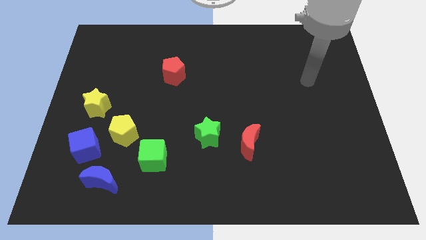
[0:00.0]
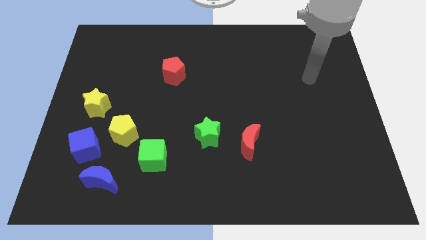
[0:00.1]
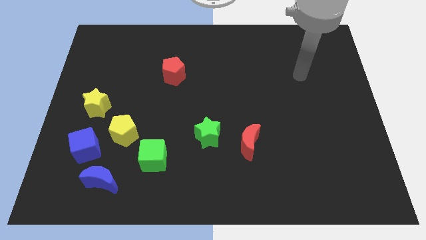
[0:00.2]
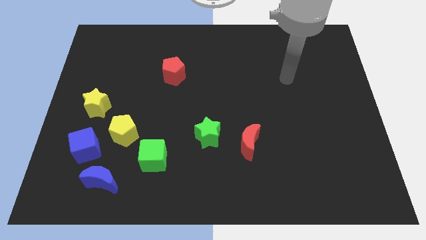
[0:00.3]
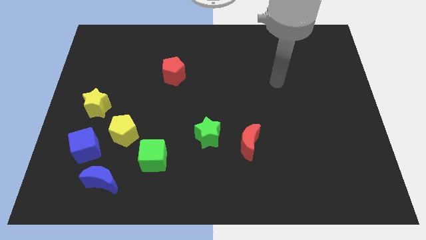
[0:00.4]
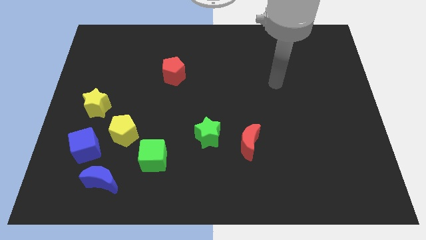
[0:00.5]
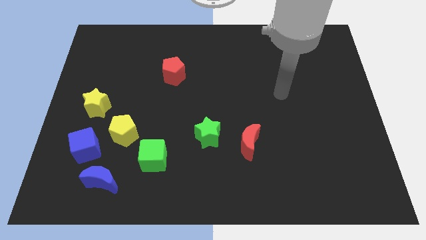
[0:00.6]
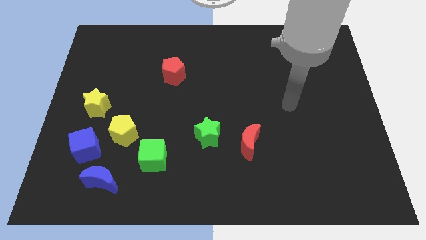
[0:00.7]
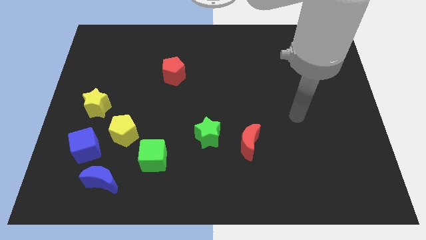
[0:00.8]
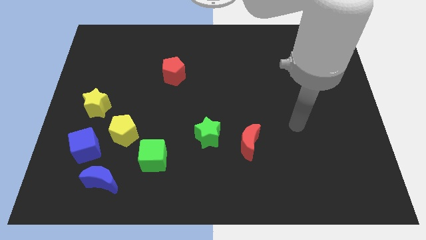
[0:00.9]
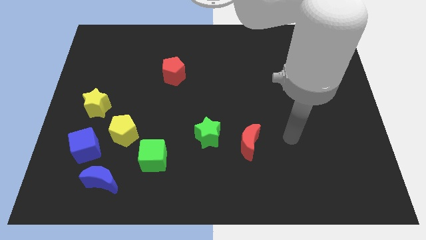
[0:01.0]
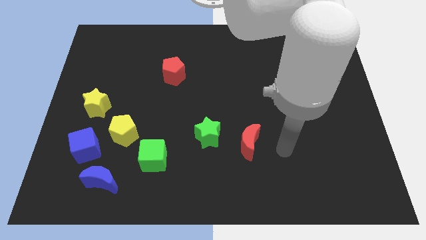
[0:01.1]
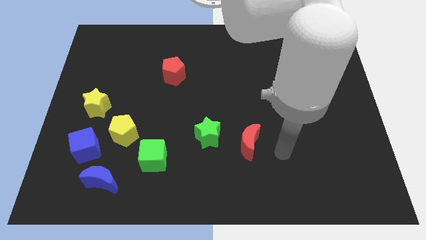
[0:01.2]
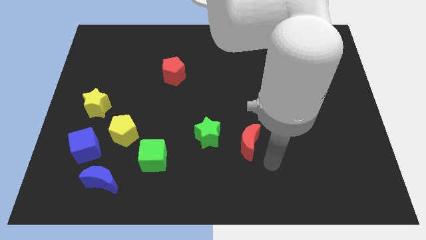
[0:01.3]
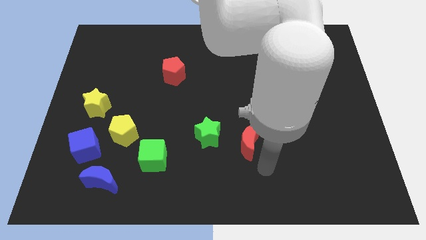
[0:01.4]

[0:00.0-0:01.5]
move your arm close to the red moon

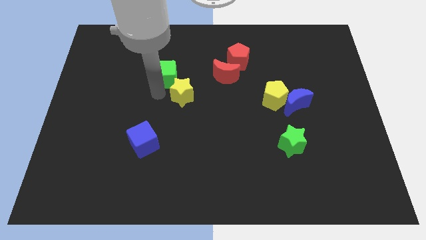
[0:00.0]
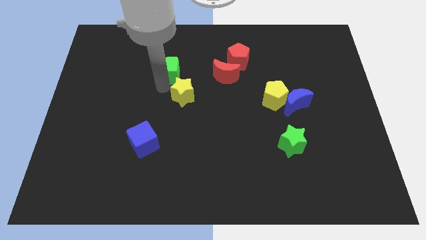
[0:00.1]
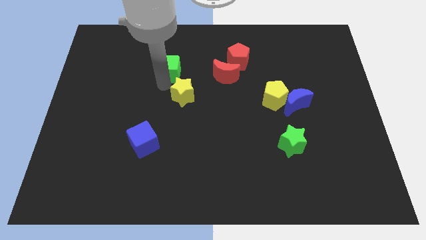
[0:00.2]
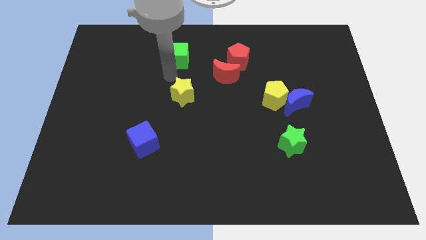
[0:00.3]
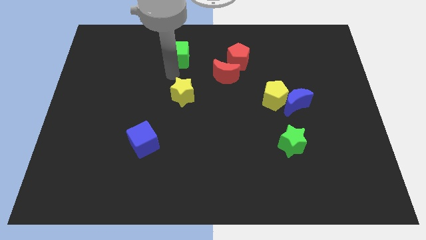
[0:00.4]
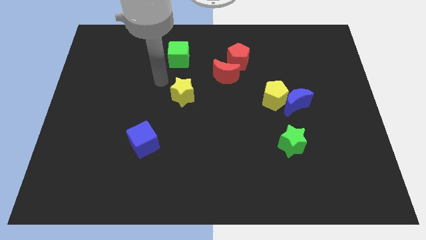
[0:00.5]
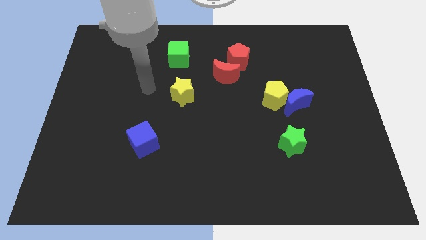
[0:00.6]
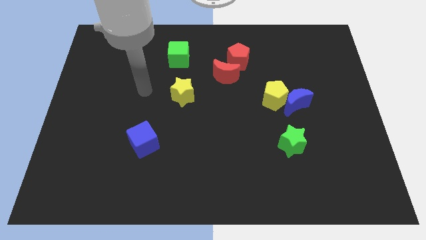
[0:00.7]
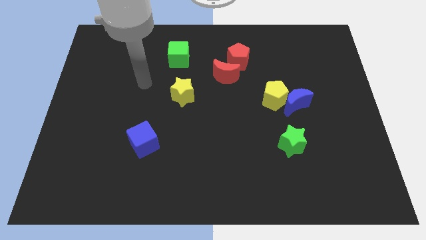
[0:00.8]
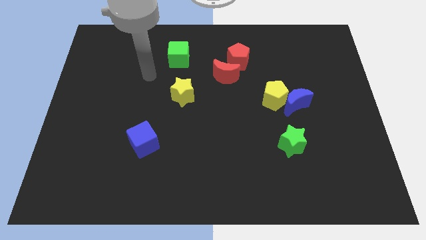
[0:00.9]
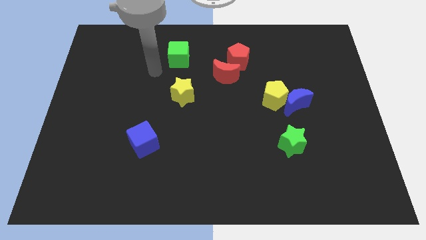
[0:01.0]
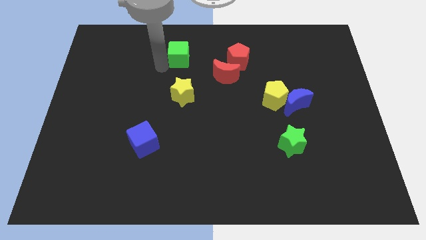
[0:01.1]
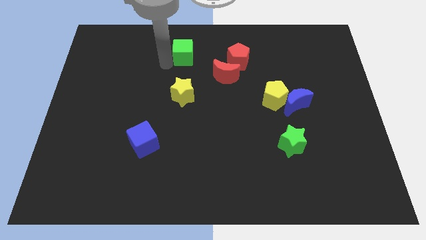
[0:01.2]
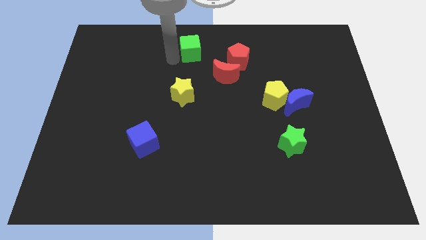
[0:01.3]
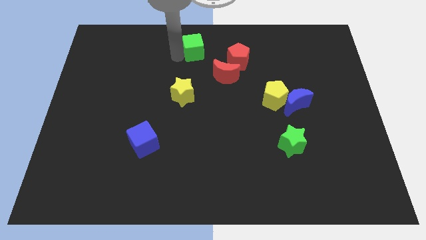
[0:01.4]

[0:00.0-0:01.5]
move the green cube diagonally to the top left of the red moon

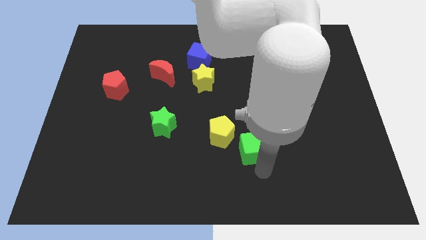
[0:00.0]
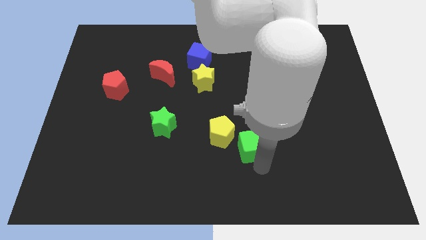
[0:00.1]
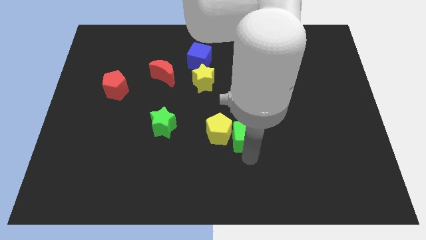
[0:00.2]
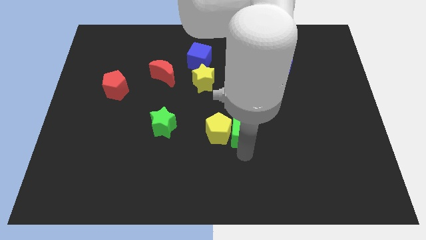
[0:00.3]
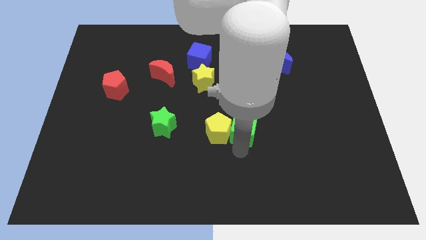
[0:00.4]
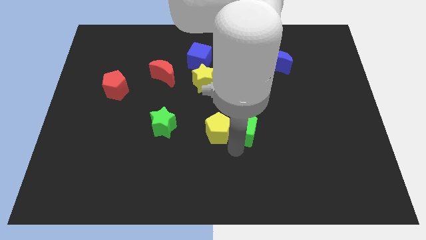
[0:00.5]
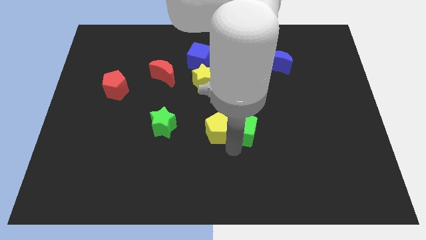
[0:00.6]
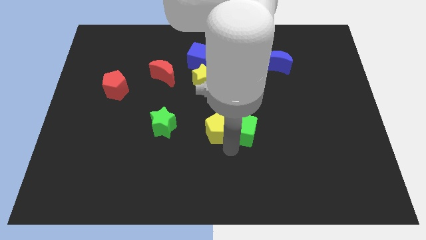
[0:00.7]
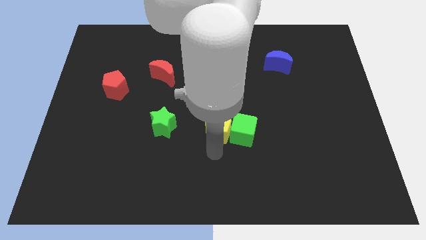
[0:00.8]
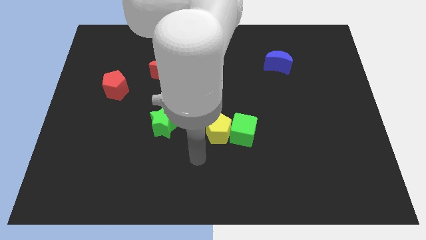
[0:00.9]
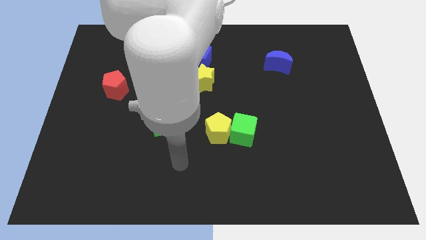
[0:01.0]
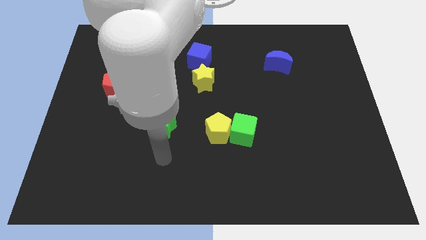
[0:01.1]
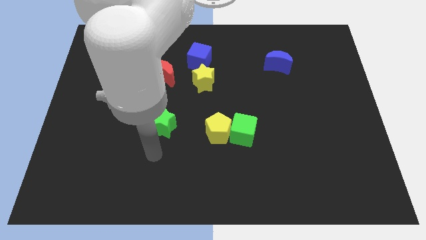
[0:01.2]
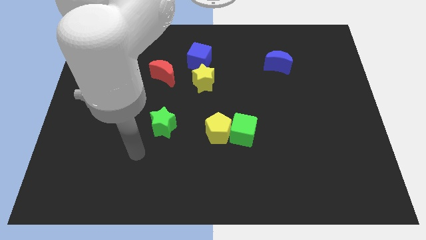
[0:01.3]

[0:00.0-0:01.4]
move the green cube right beside the yellow pentagon

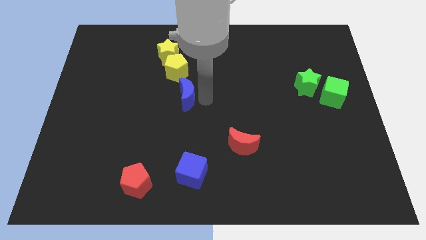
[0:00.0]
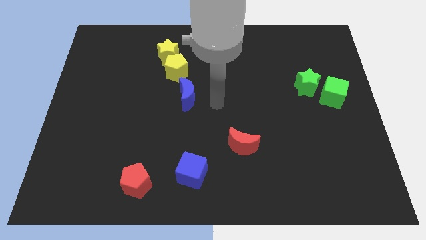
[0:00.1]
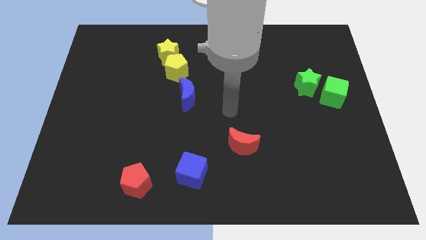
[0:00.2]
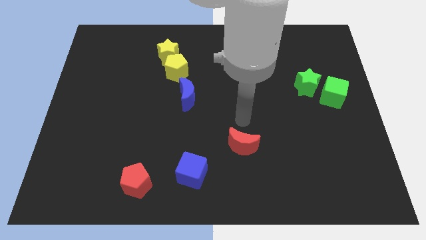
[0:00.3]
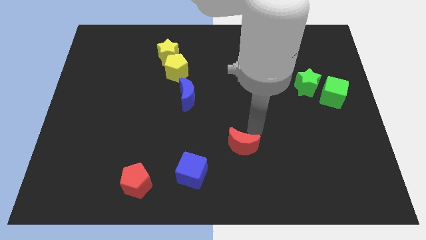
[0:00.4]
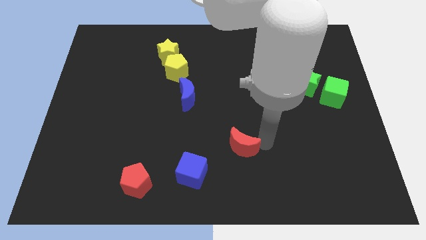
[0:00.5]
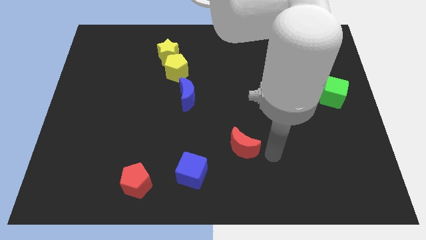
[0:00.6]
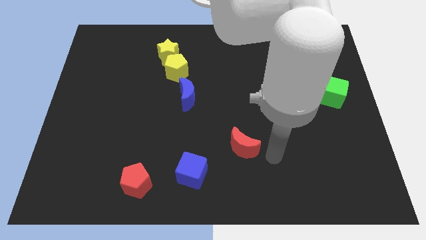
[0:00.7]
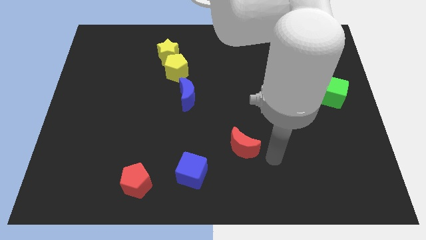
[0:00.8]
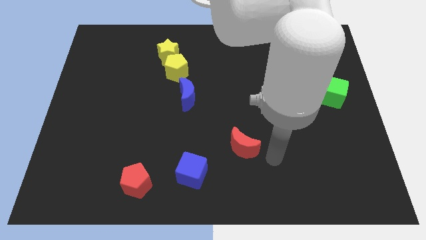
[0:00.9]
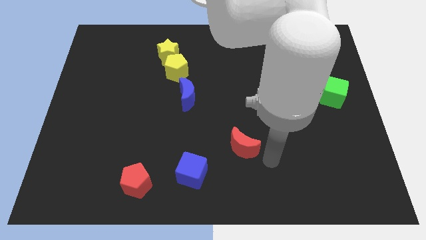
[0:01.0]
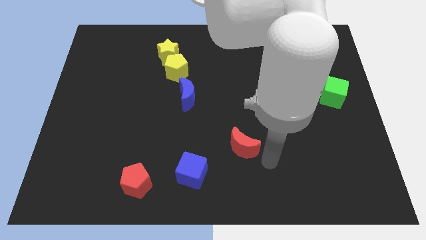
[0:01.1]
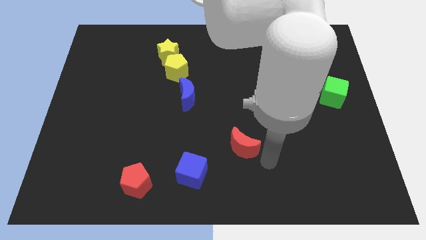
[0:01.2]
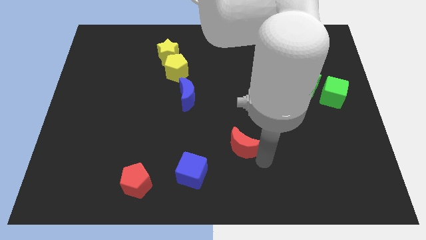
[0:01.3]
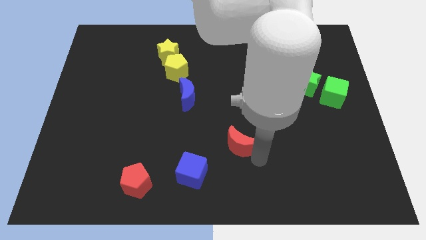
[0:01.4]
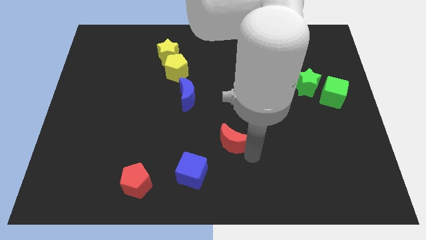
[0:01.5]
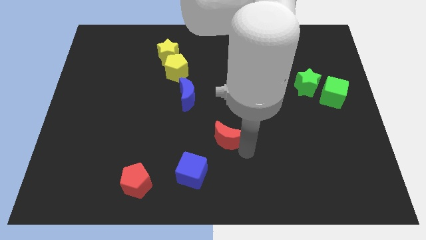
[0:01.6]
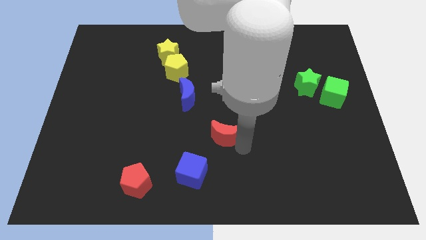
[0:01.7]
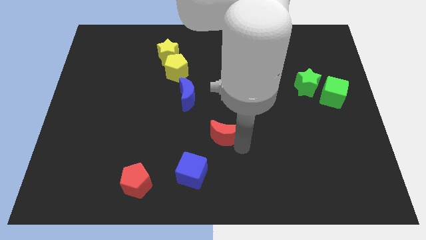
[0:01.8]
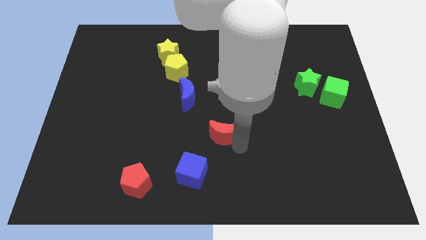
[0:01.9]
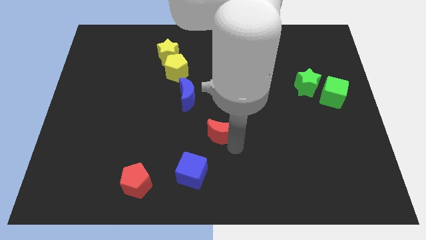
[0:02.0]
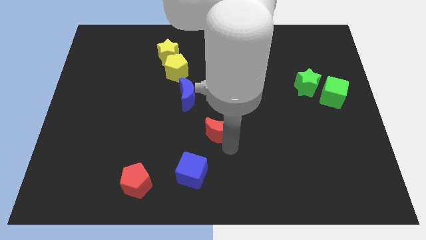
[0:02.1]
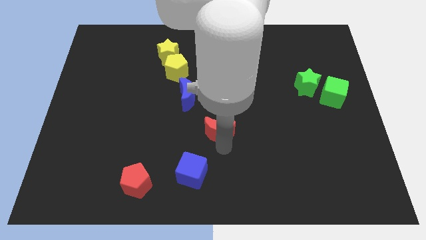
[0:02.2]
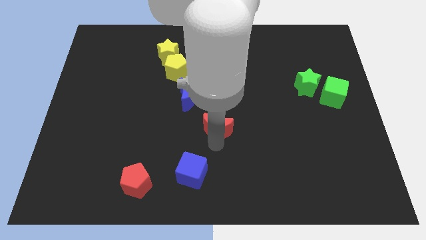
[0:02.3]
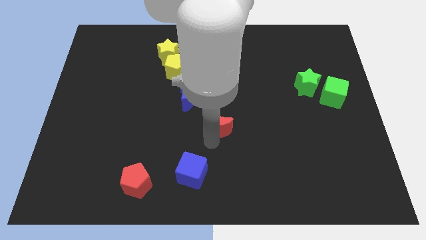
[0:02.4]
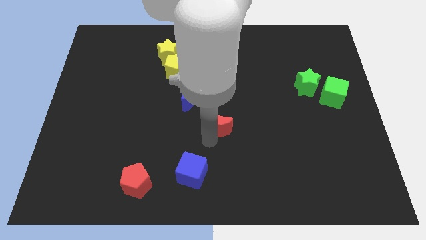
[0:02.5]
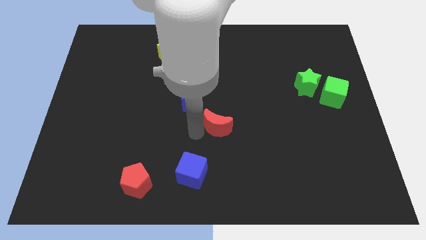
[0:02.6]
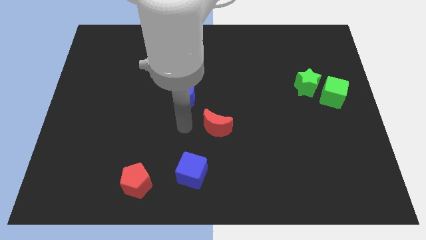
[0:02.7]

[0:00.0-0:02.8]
move the red crescent to the bottom right of the blue crescent

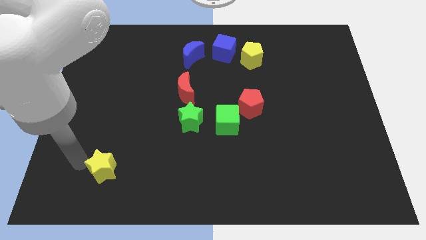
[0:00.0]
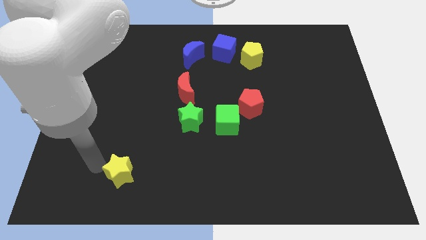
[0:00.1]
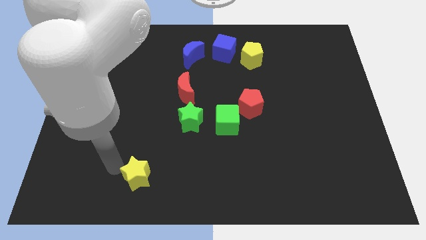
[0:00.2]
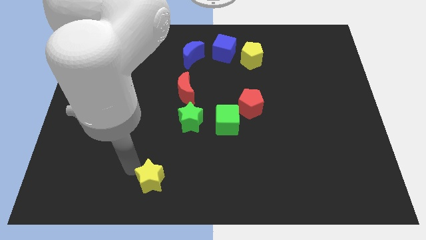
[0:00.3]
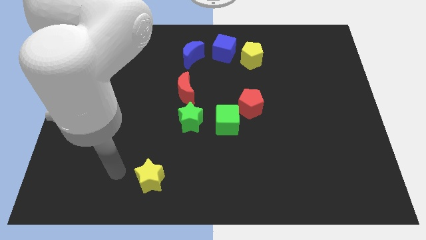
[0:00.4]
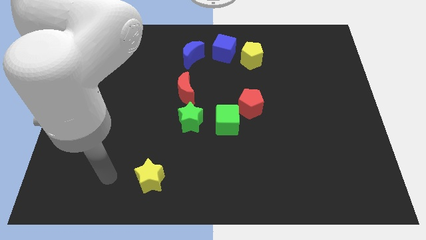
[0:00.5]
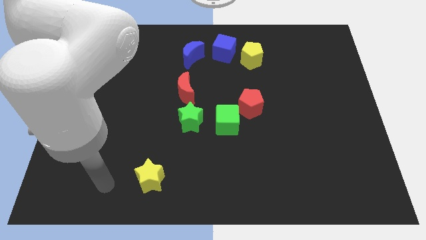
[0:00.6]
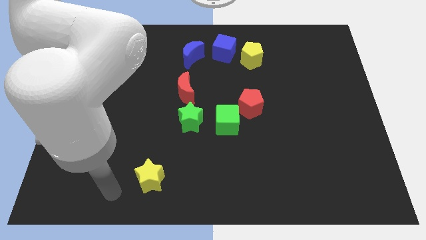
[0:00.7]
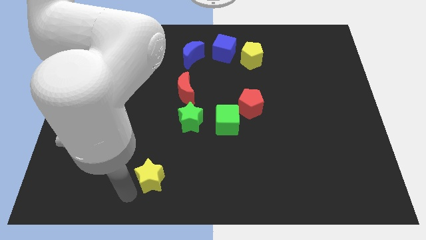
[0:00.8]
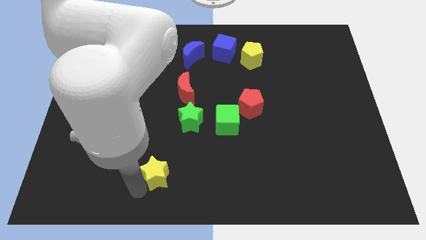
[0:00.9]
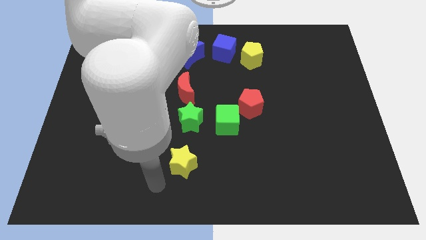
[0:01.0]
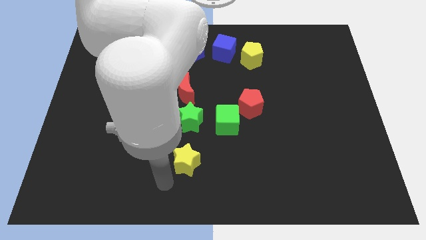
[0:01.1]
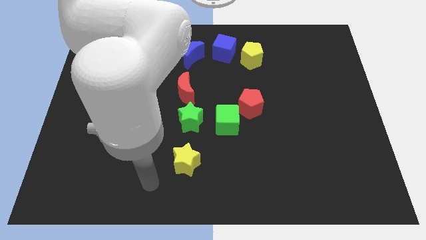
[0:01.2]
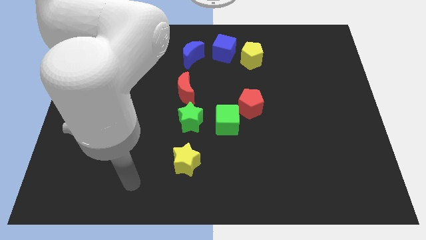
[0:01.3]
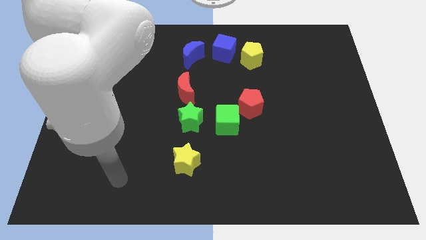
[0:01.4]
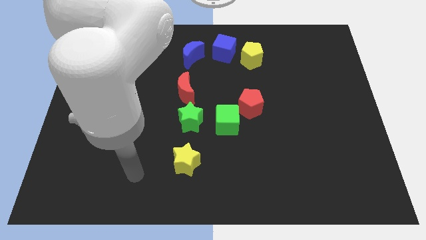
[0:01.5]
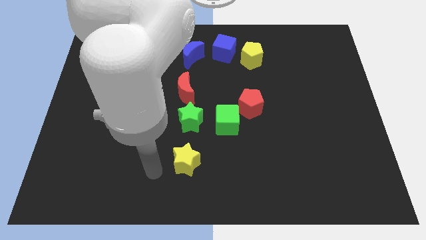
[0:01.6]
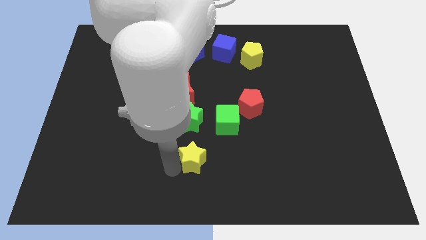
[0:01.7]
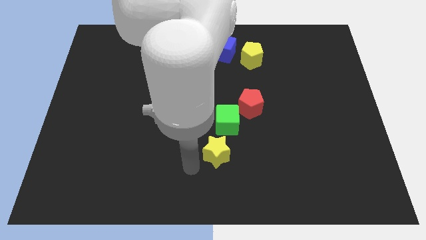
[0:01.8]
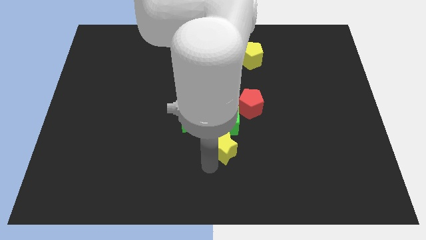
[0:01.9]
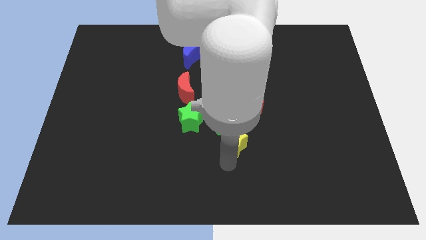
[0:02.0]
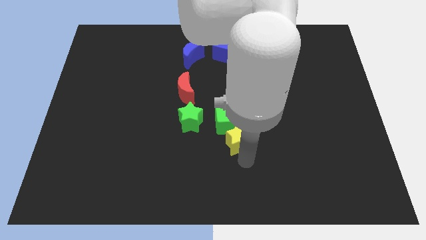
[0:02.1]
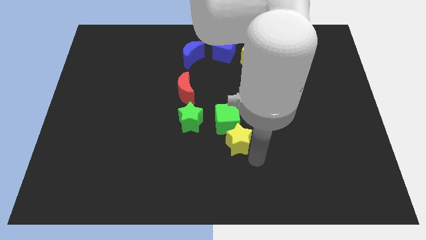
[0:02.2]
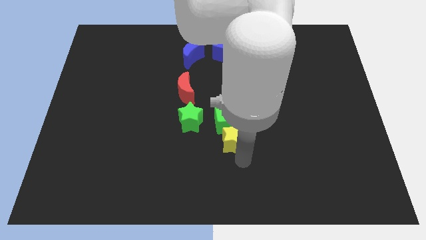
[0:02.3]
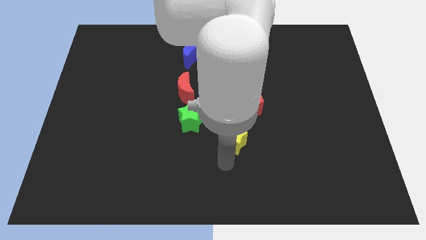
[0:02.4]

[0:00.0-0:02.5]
place yellow star below the green cube
